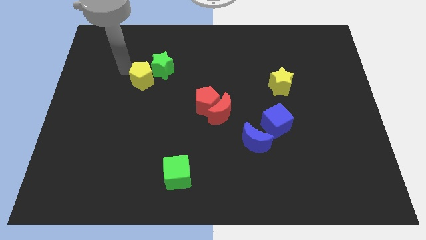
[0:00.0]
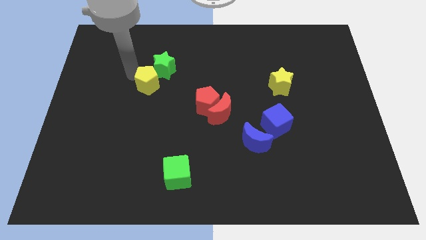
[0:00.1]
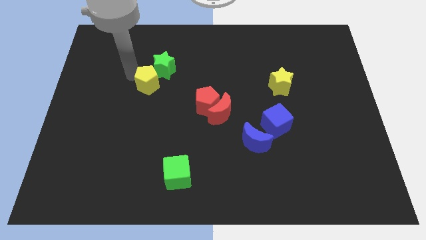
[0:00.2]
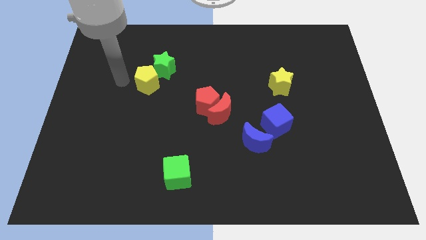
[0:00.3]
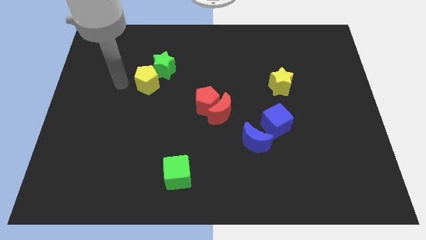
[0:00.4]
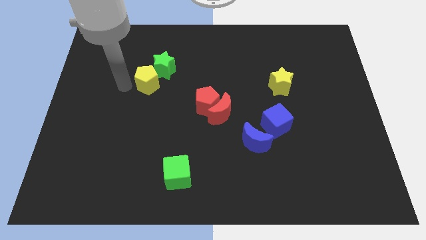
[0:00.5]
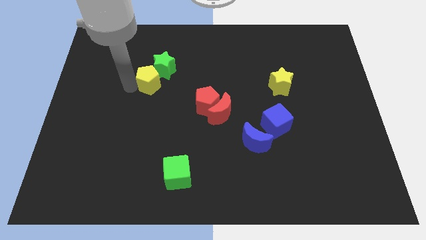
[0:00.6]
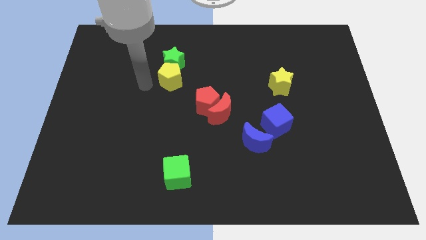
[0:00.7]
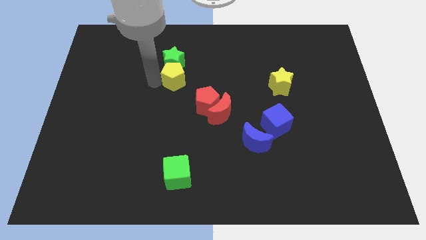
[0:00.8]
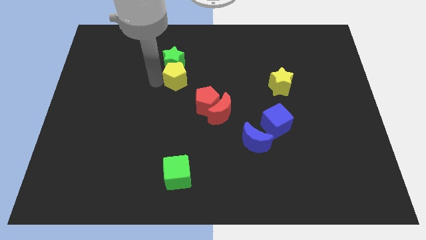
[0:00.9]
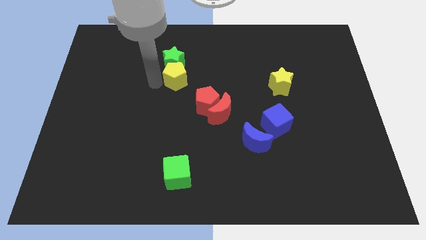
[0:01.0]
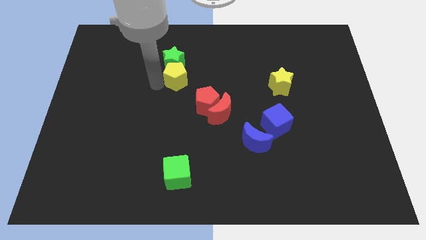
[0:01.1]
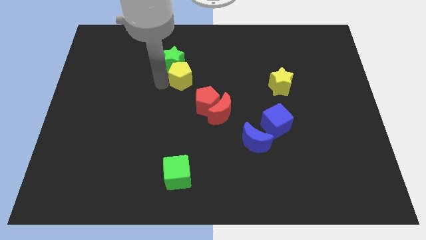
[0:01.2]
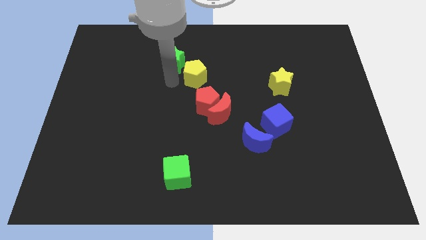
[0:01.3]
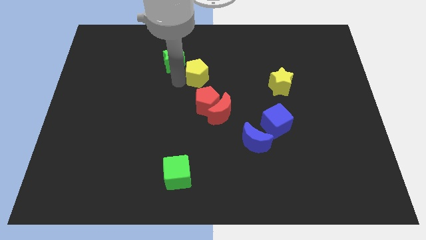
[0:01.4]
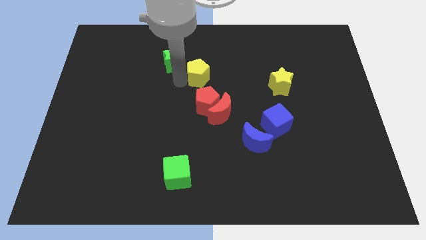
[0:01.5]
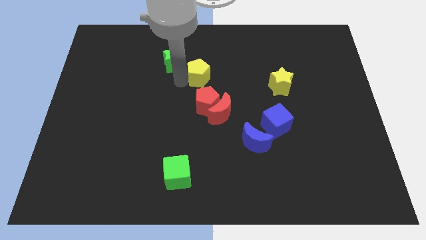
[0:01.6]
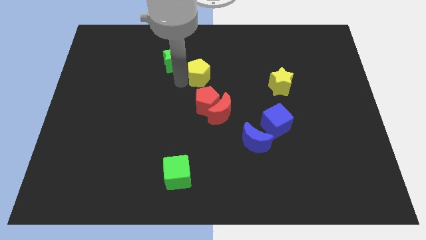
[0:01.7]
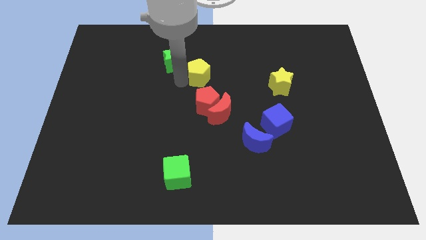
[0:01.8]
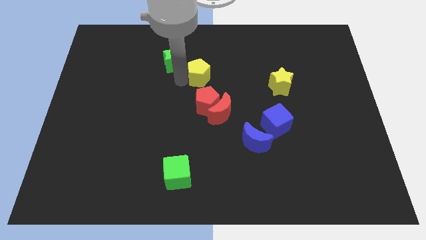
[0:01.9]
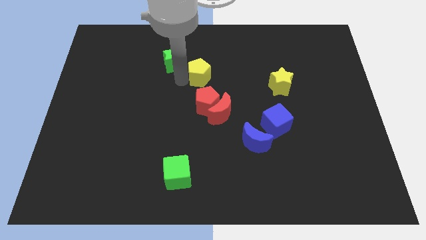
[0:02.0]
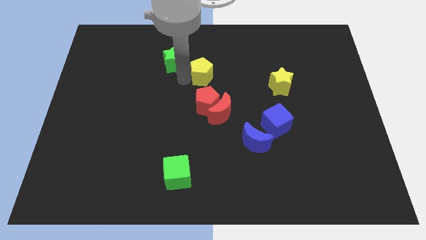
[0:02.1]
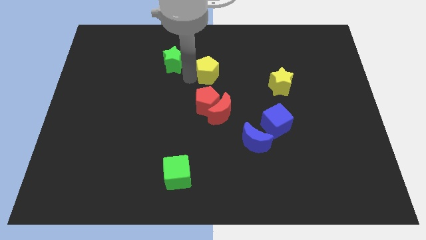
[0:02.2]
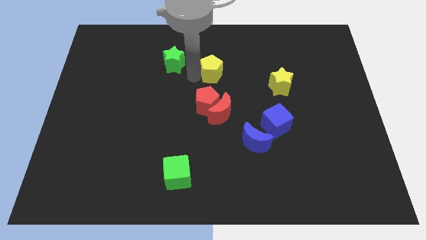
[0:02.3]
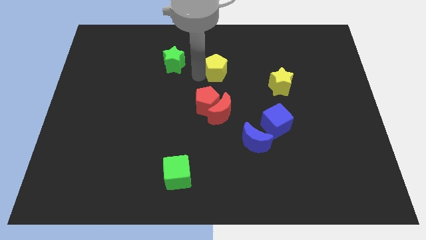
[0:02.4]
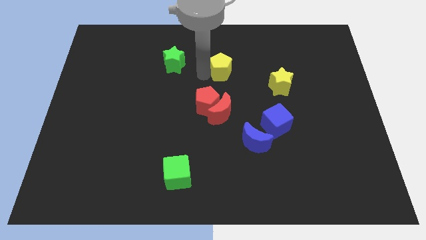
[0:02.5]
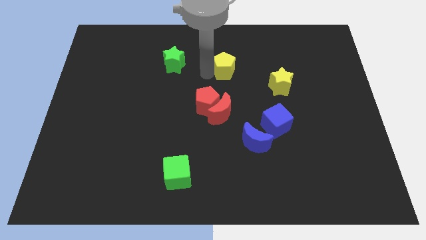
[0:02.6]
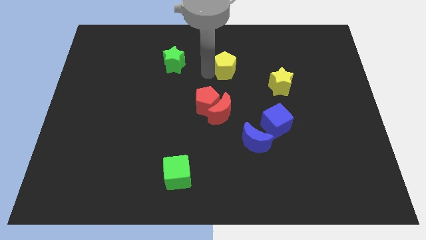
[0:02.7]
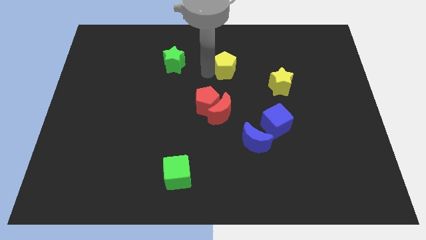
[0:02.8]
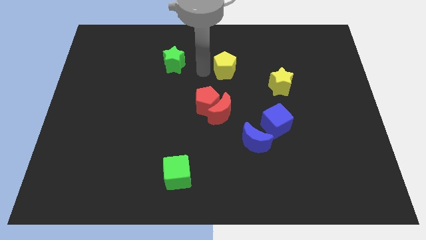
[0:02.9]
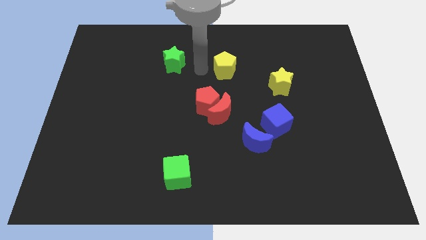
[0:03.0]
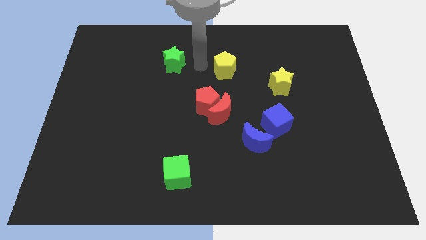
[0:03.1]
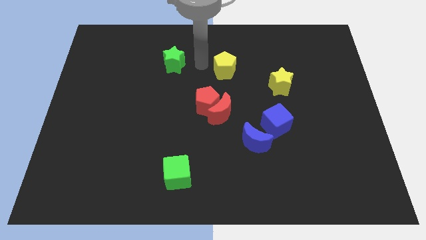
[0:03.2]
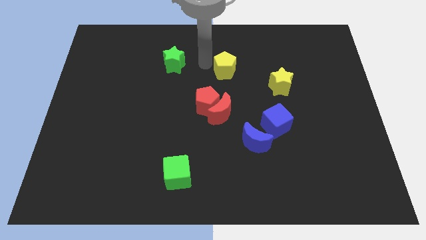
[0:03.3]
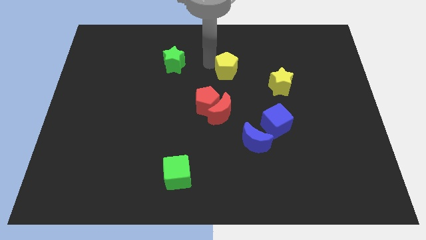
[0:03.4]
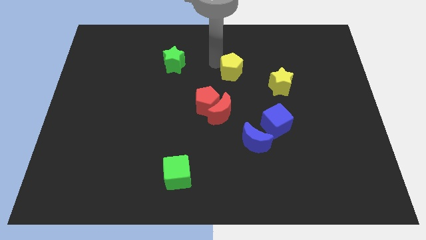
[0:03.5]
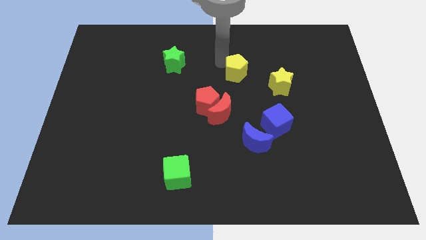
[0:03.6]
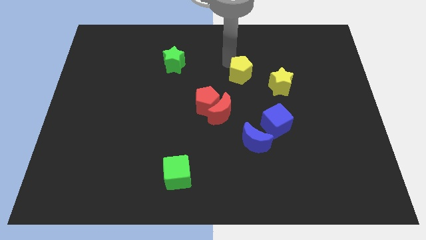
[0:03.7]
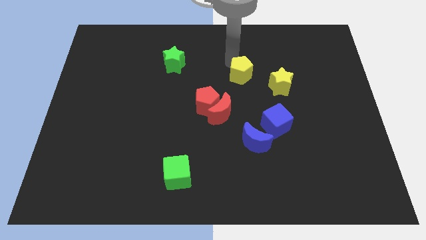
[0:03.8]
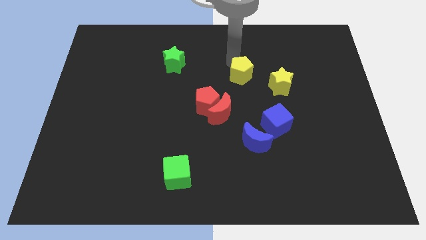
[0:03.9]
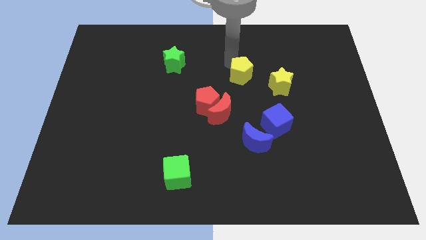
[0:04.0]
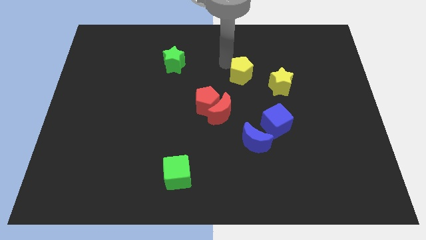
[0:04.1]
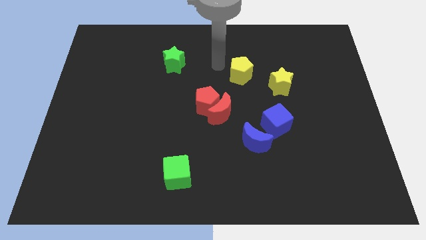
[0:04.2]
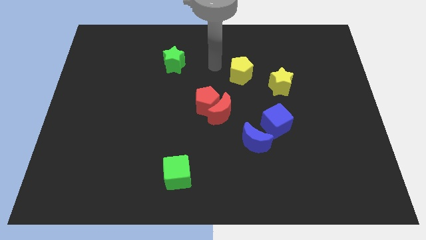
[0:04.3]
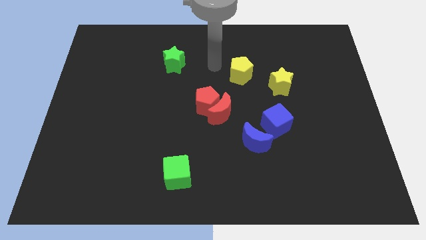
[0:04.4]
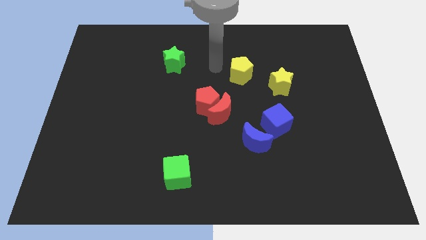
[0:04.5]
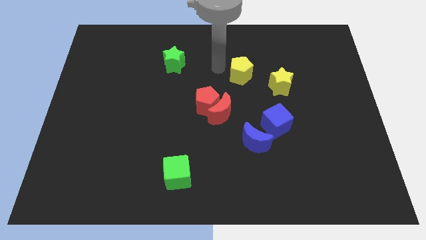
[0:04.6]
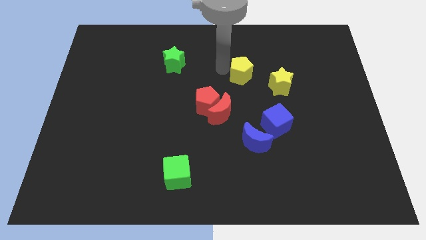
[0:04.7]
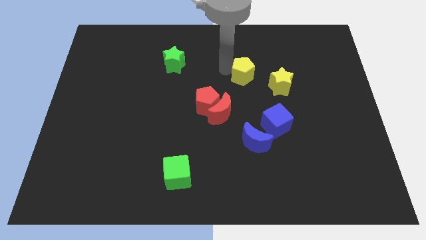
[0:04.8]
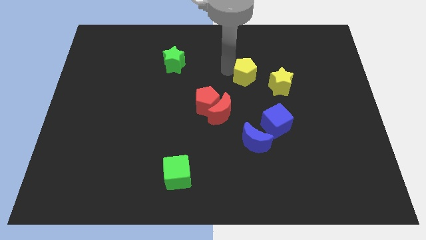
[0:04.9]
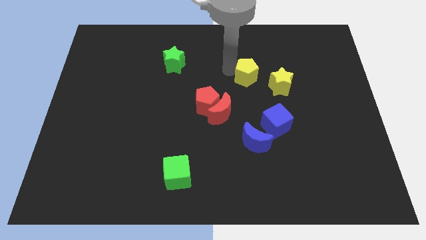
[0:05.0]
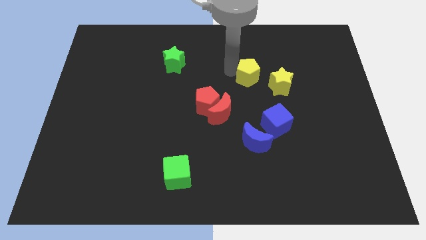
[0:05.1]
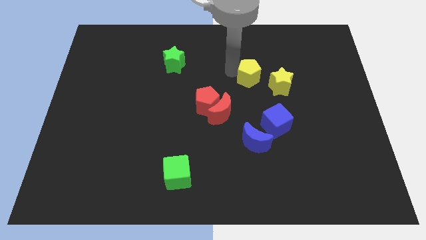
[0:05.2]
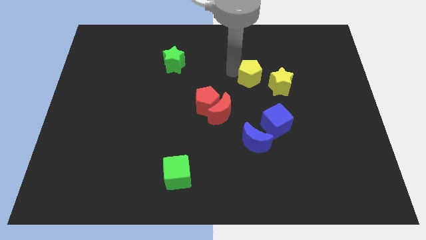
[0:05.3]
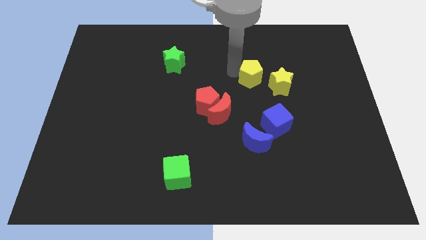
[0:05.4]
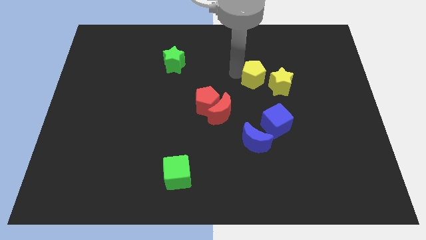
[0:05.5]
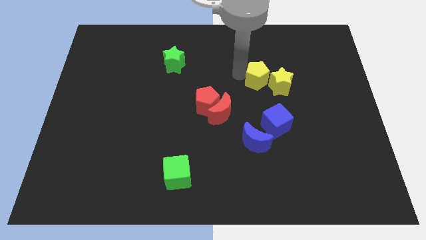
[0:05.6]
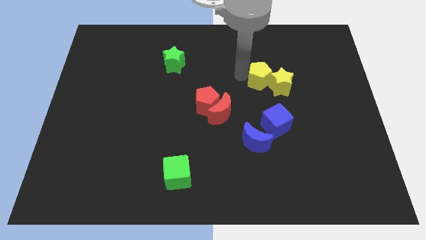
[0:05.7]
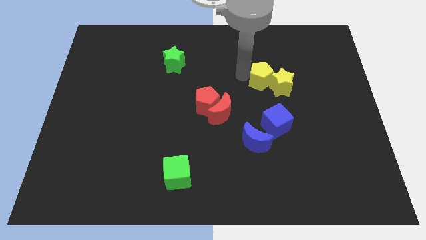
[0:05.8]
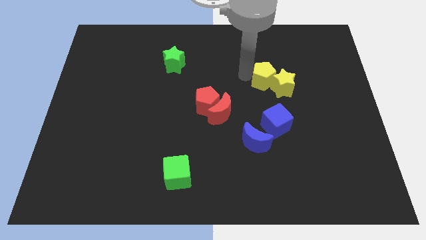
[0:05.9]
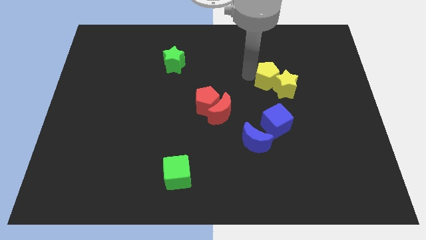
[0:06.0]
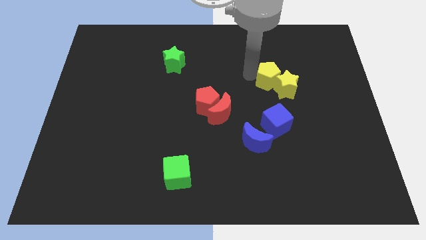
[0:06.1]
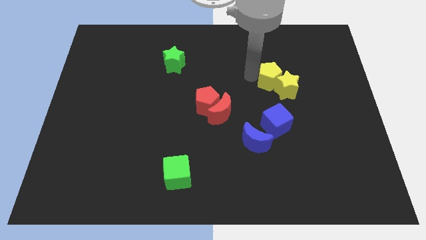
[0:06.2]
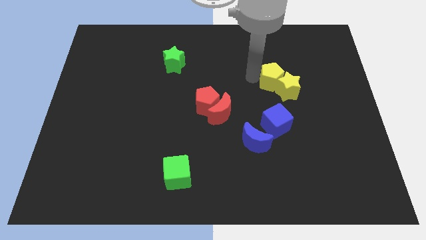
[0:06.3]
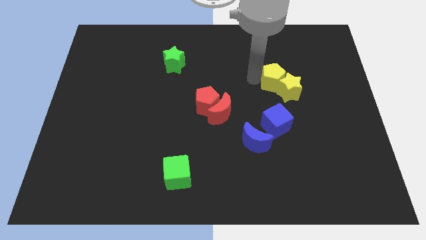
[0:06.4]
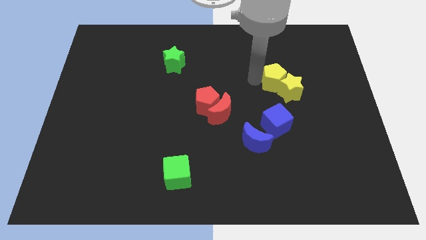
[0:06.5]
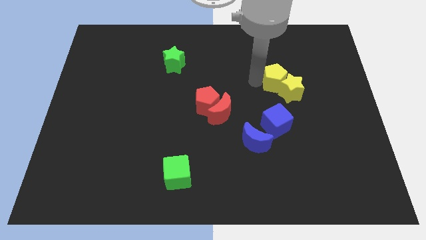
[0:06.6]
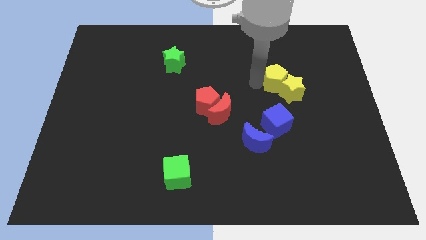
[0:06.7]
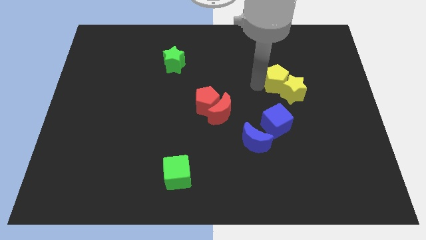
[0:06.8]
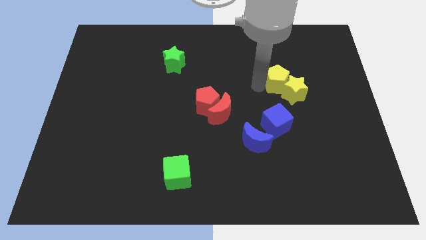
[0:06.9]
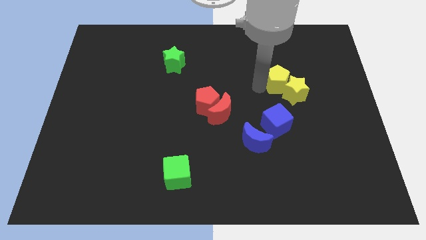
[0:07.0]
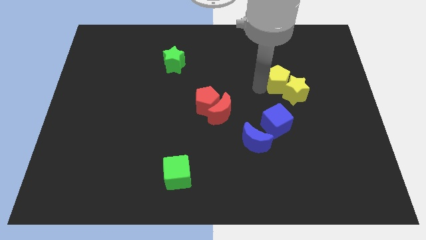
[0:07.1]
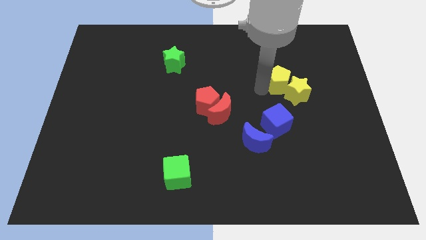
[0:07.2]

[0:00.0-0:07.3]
move the yellow pentagon diagonal left to the yellow star

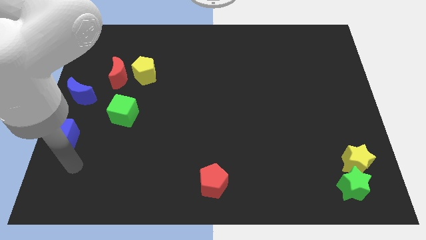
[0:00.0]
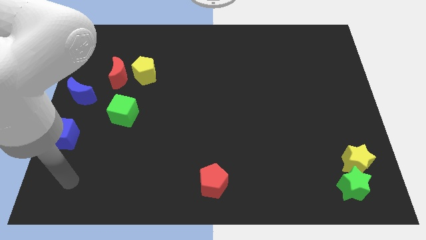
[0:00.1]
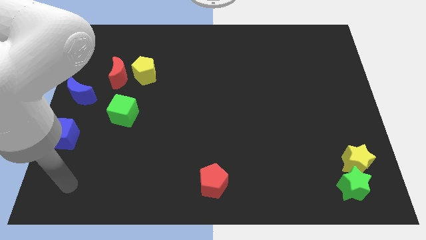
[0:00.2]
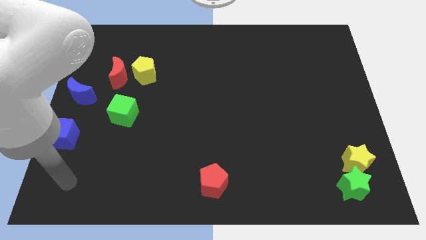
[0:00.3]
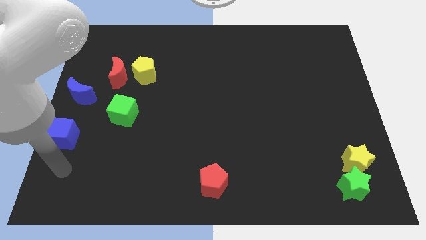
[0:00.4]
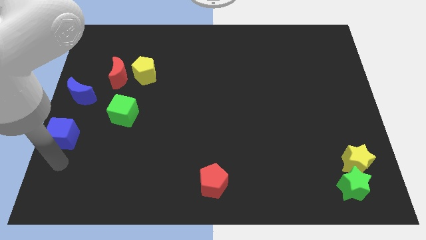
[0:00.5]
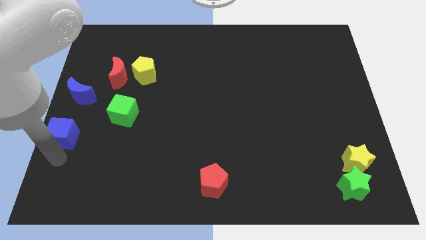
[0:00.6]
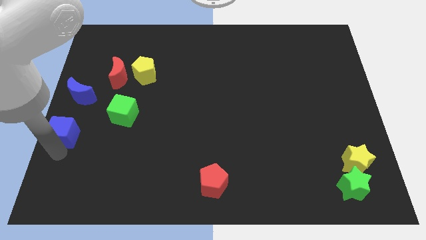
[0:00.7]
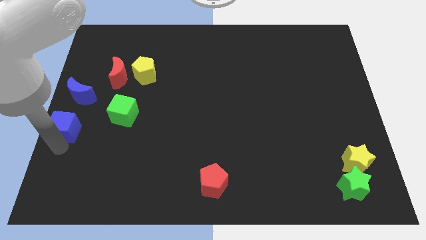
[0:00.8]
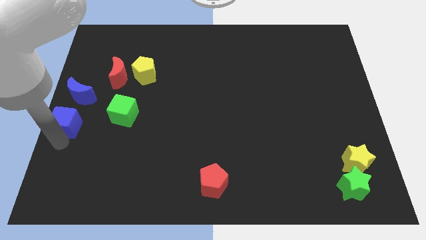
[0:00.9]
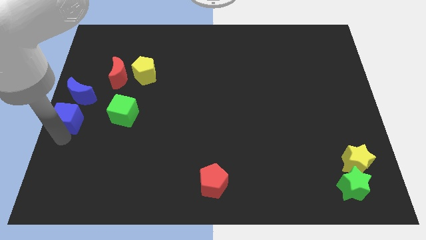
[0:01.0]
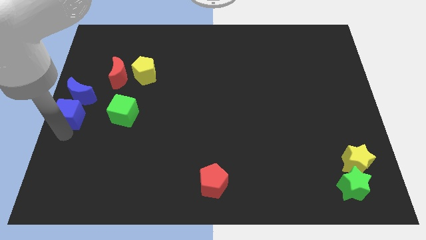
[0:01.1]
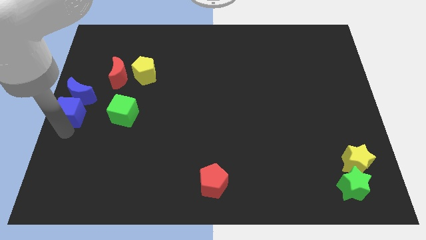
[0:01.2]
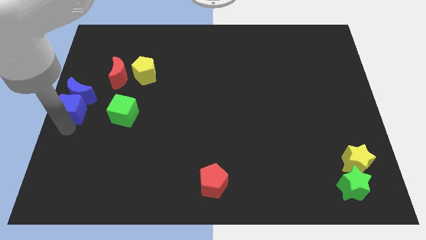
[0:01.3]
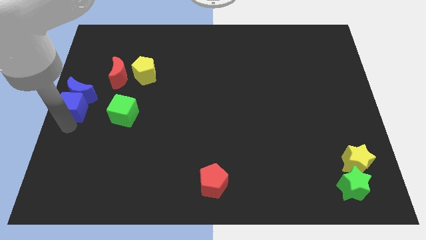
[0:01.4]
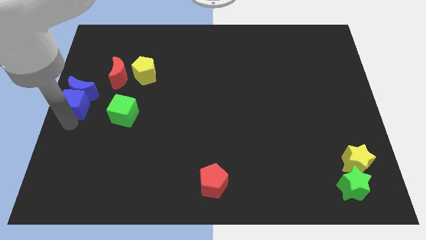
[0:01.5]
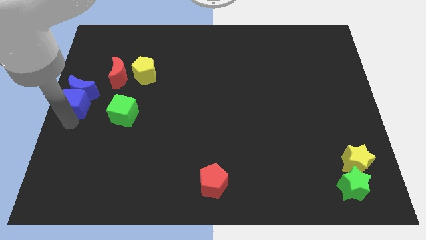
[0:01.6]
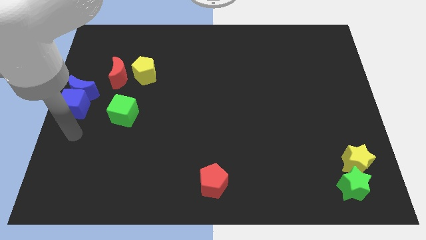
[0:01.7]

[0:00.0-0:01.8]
push the blue cube into the blue moon
